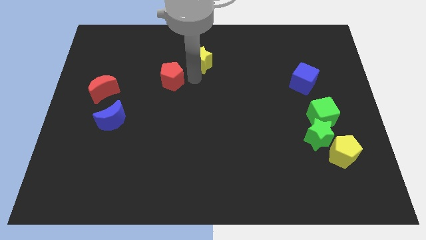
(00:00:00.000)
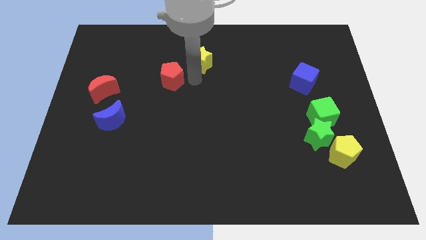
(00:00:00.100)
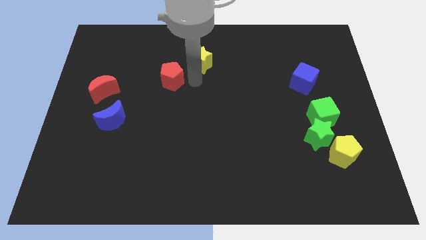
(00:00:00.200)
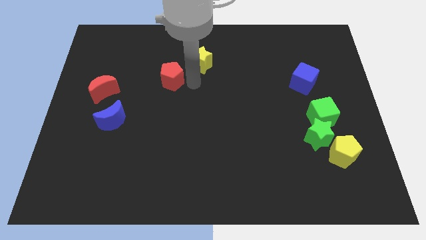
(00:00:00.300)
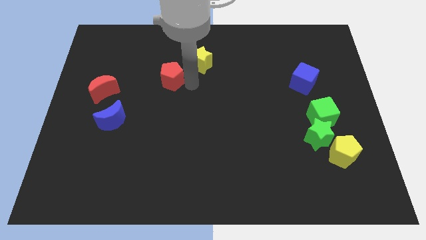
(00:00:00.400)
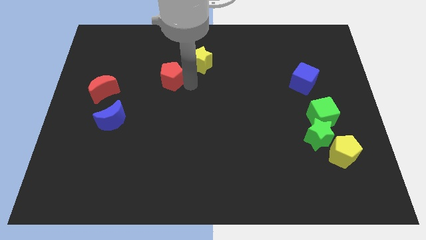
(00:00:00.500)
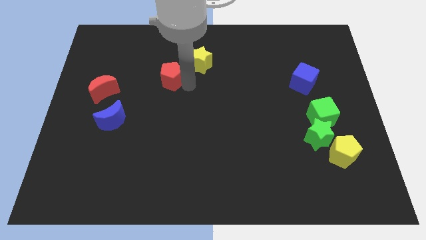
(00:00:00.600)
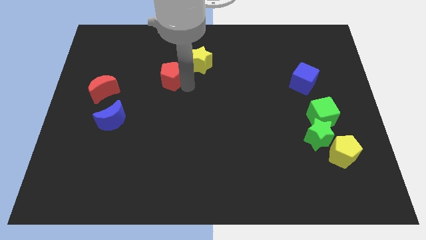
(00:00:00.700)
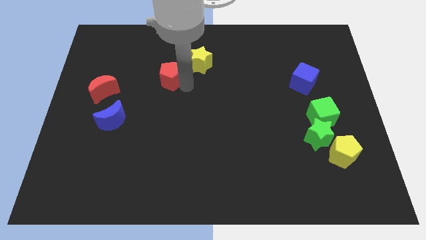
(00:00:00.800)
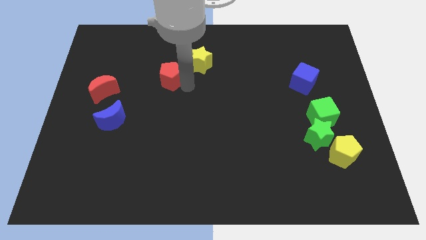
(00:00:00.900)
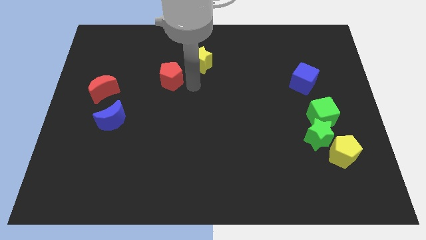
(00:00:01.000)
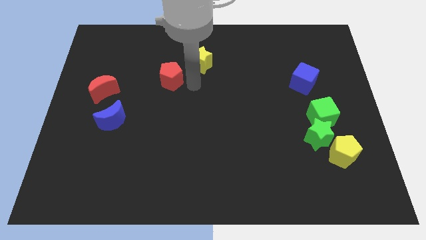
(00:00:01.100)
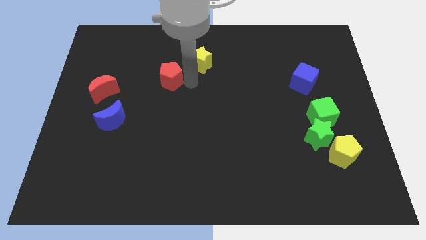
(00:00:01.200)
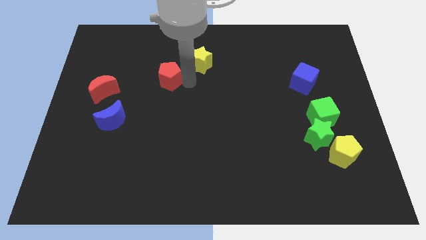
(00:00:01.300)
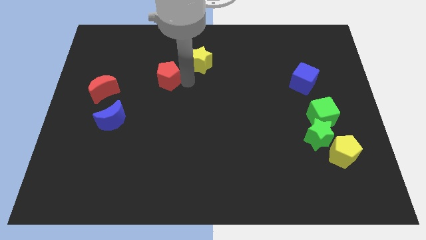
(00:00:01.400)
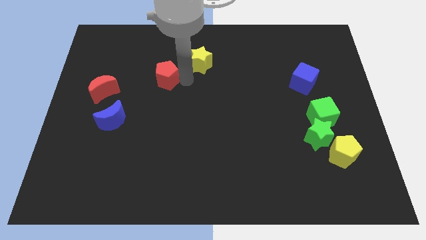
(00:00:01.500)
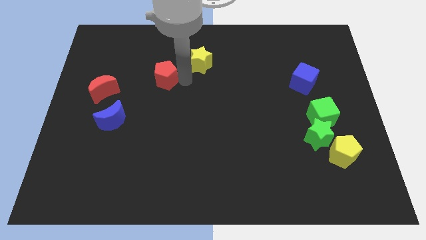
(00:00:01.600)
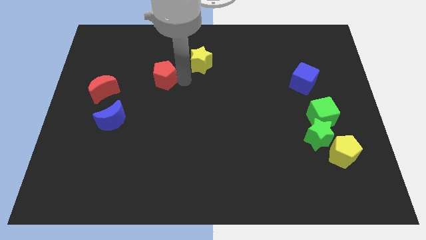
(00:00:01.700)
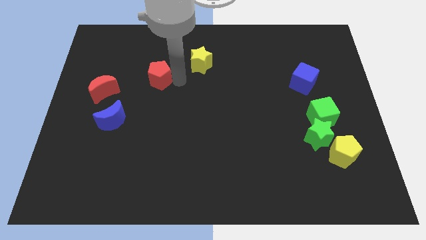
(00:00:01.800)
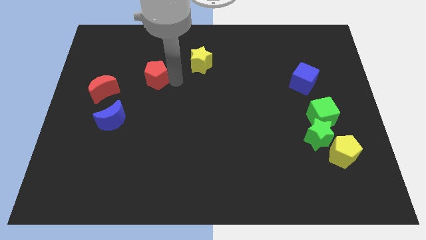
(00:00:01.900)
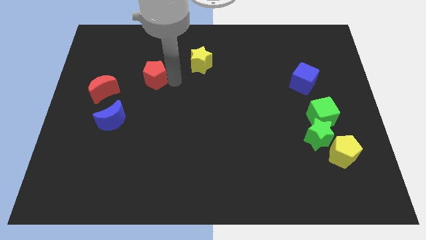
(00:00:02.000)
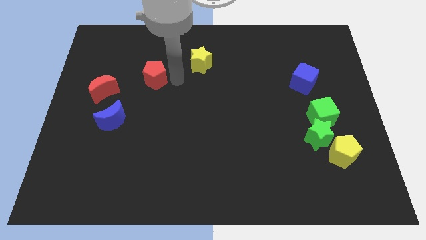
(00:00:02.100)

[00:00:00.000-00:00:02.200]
place the red pentagon between the red moon and yellow star

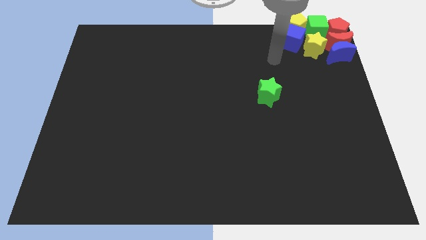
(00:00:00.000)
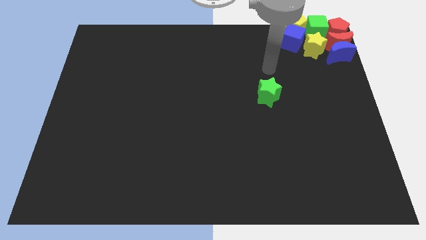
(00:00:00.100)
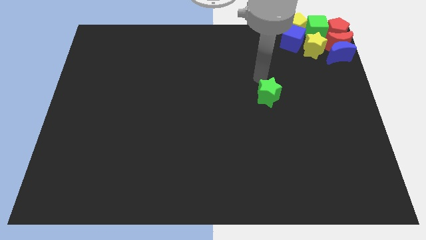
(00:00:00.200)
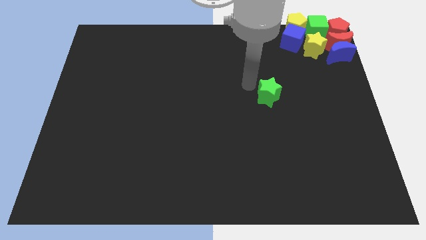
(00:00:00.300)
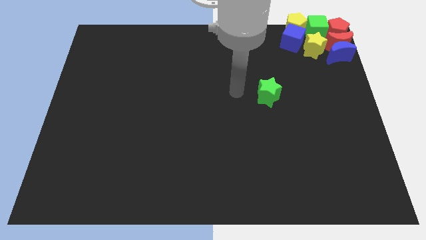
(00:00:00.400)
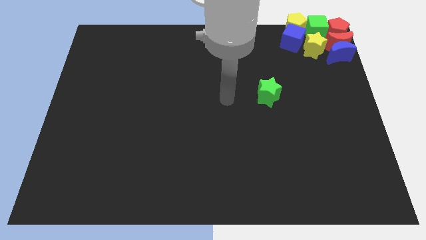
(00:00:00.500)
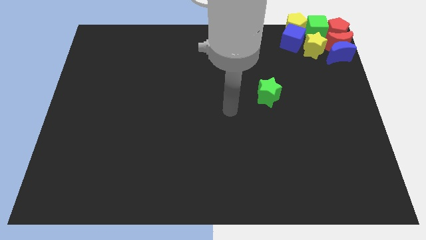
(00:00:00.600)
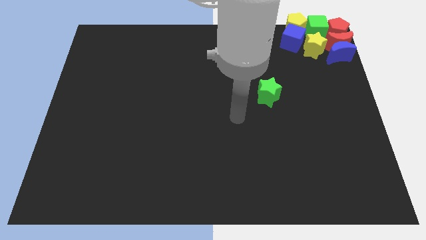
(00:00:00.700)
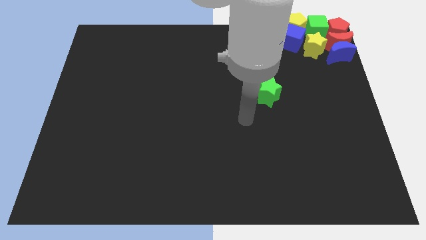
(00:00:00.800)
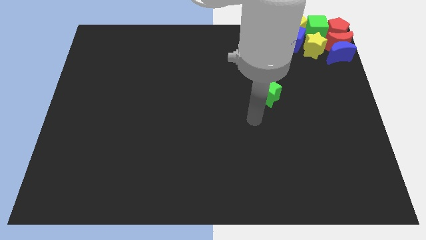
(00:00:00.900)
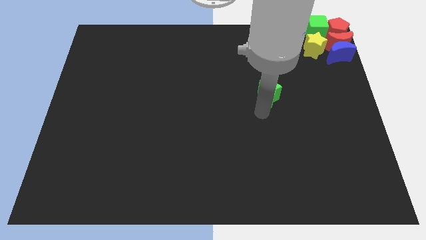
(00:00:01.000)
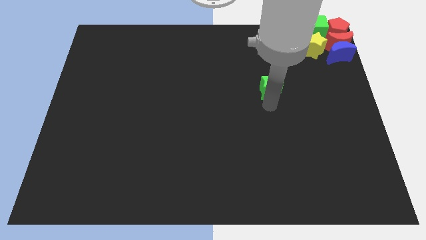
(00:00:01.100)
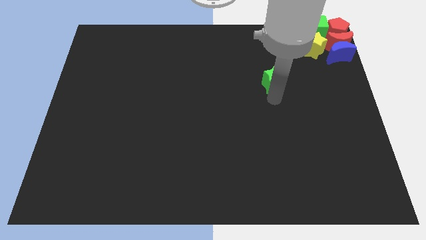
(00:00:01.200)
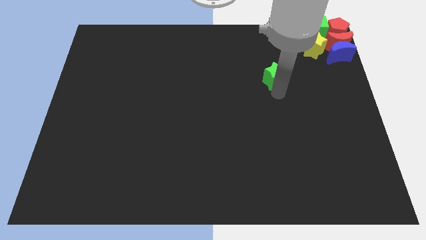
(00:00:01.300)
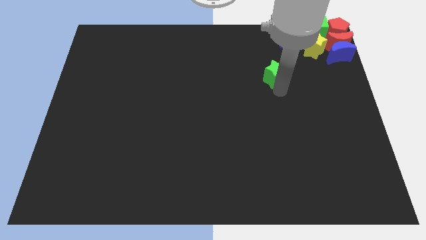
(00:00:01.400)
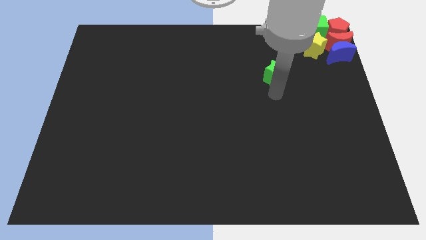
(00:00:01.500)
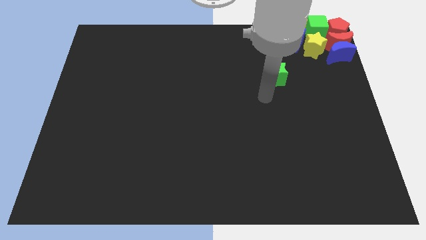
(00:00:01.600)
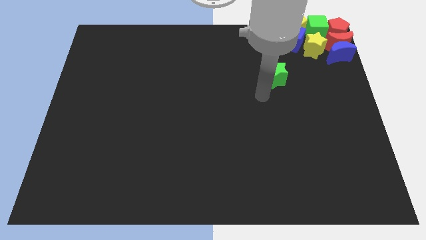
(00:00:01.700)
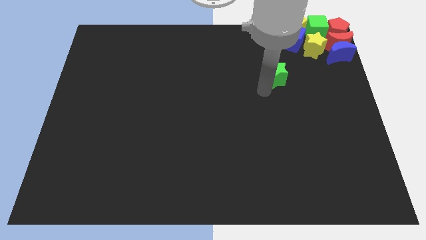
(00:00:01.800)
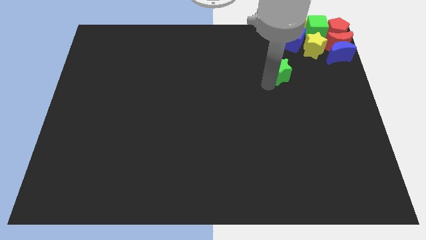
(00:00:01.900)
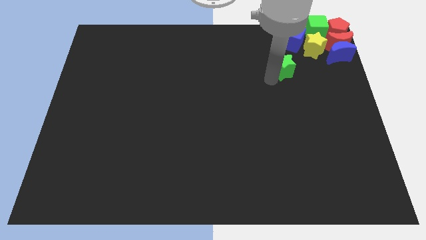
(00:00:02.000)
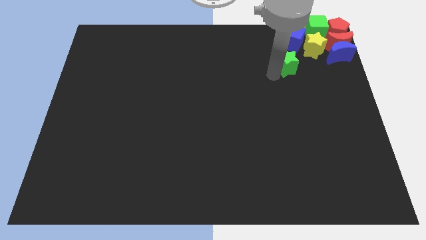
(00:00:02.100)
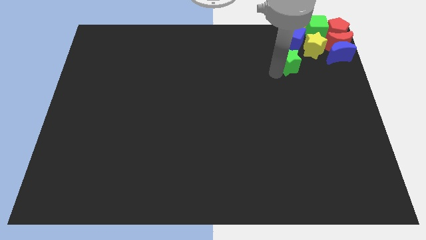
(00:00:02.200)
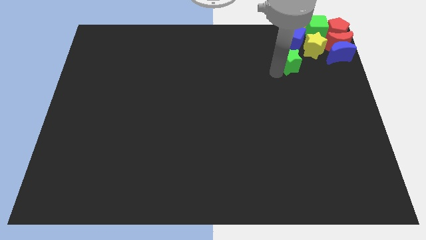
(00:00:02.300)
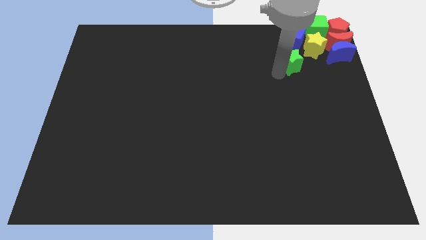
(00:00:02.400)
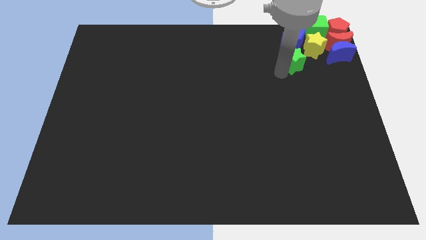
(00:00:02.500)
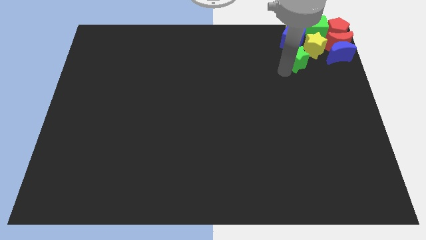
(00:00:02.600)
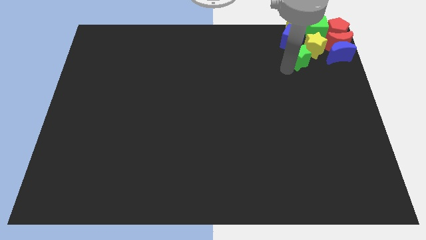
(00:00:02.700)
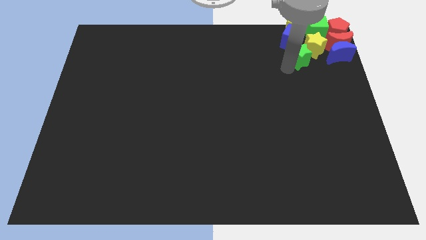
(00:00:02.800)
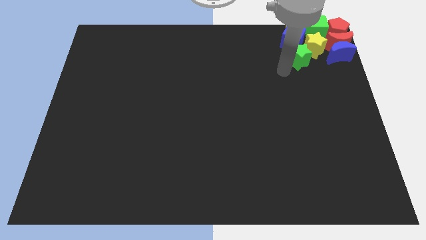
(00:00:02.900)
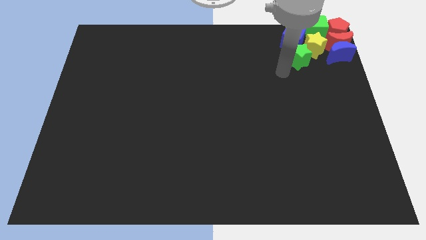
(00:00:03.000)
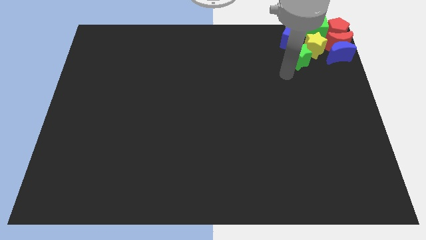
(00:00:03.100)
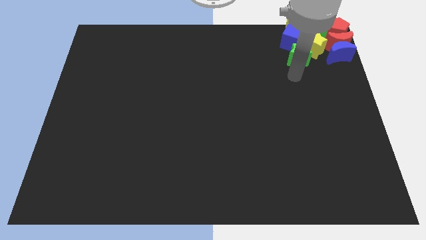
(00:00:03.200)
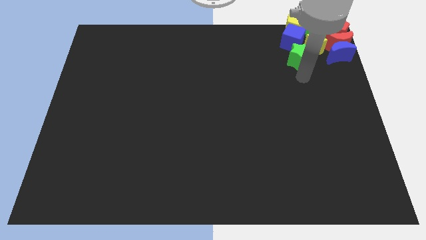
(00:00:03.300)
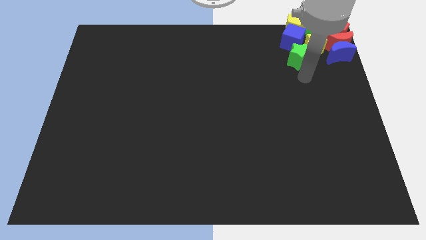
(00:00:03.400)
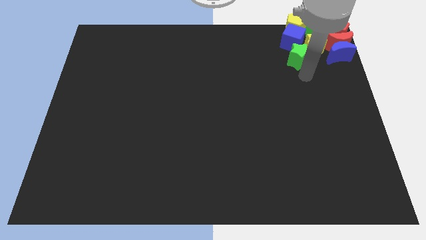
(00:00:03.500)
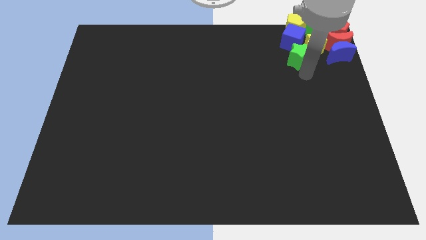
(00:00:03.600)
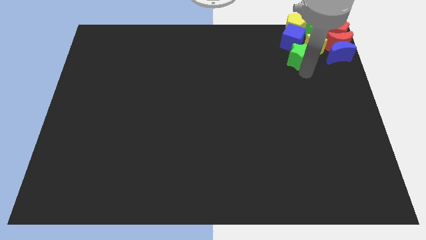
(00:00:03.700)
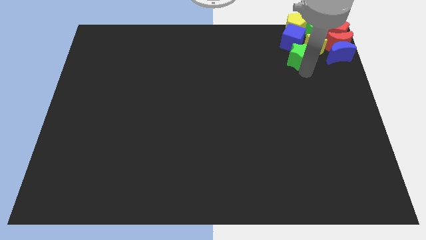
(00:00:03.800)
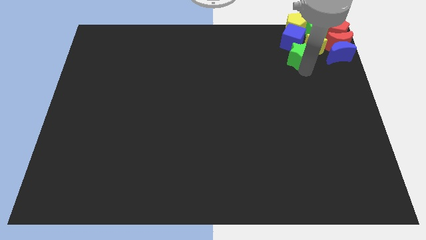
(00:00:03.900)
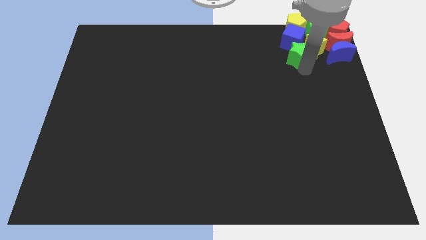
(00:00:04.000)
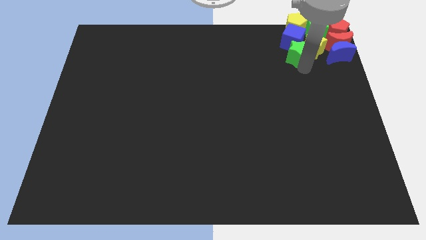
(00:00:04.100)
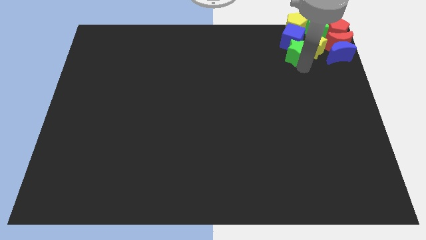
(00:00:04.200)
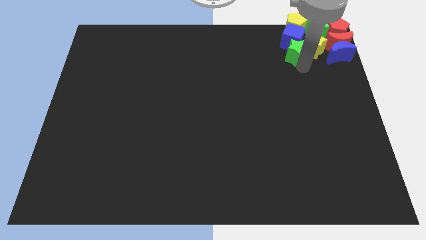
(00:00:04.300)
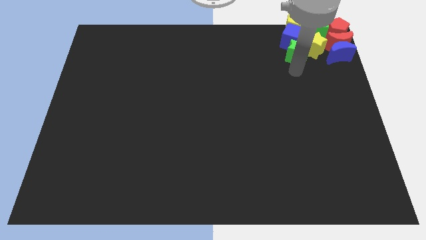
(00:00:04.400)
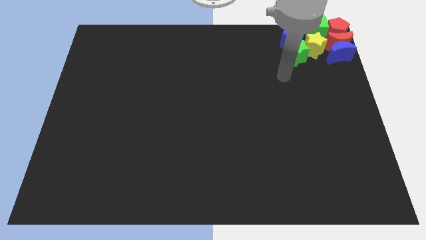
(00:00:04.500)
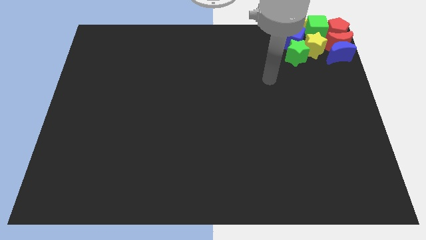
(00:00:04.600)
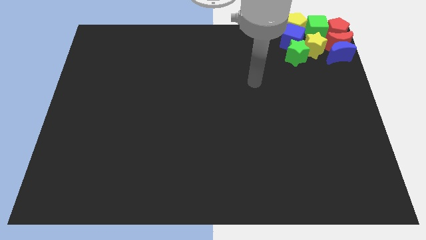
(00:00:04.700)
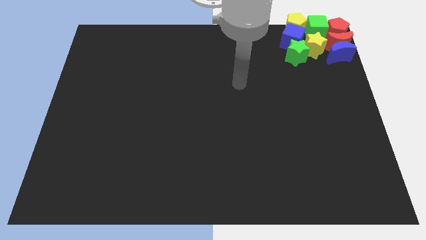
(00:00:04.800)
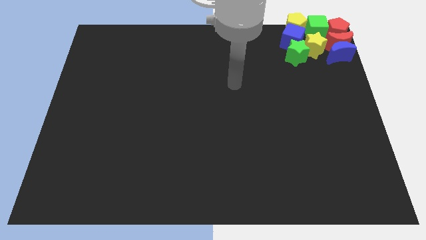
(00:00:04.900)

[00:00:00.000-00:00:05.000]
push the green star into the yellow star

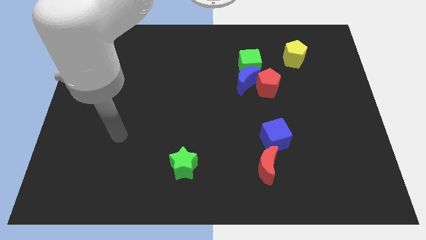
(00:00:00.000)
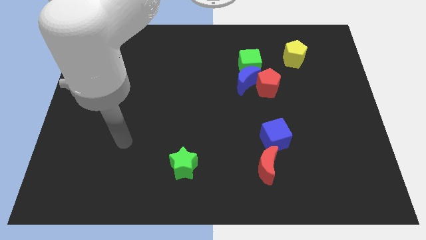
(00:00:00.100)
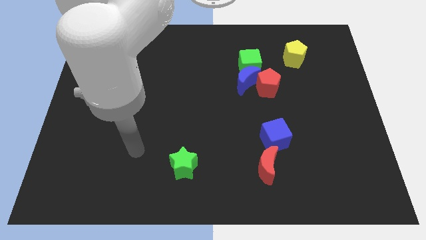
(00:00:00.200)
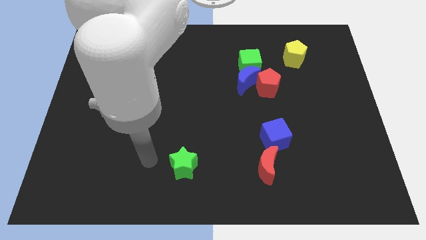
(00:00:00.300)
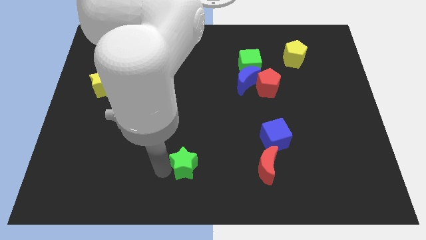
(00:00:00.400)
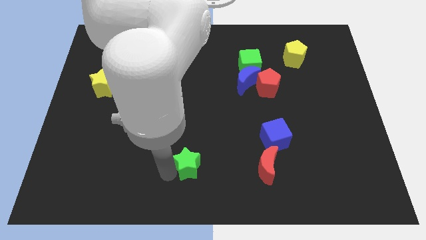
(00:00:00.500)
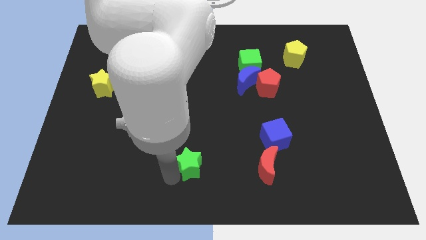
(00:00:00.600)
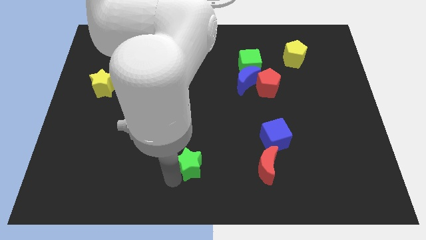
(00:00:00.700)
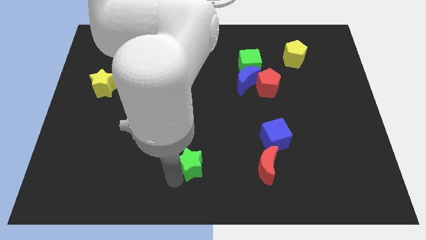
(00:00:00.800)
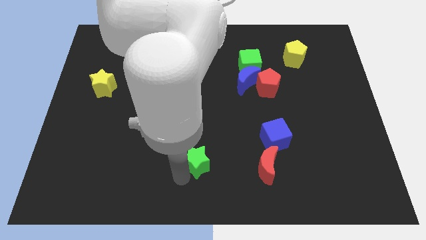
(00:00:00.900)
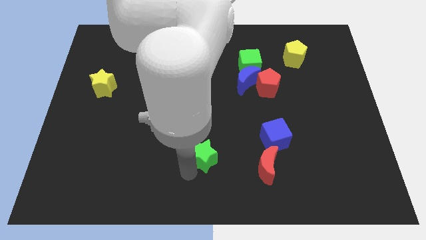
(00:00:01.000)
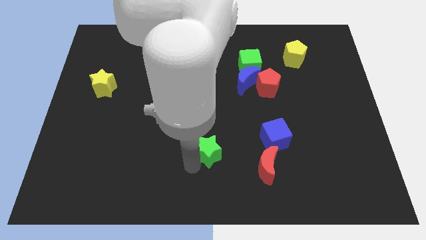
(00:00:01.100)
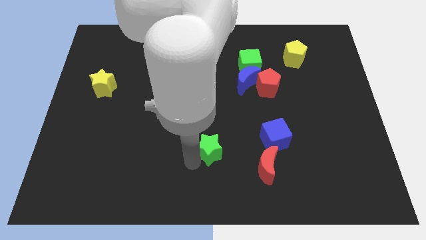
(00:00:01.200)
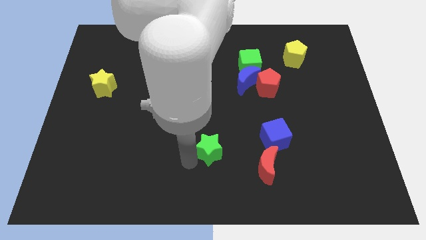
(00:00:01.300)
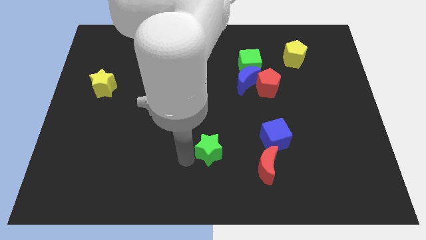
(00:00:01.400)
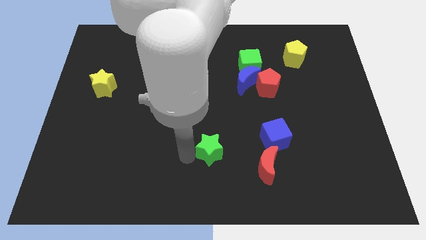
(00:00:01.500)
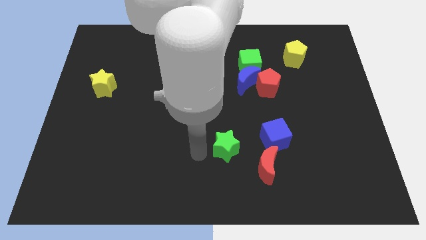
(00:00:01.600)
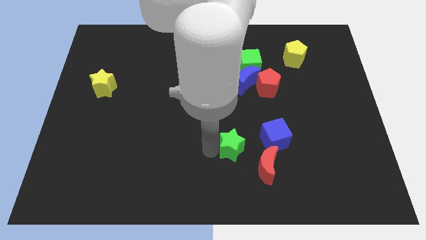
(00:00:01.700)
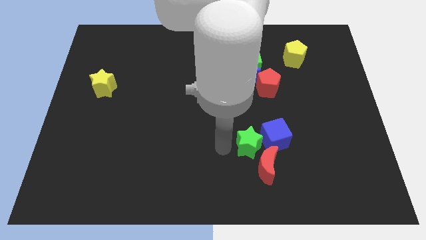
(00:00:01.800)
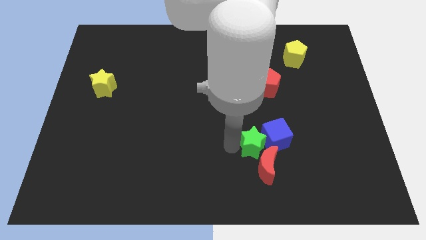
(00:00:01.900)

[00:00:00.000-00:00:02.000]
push the green star to the left side of the blue cube
